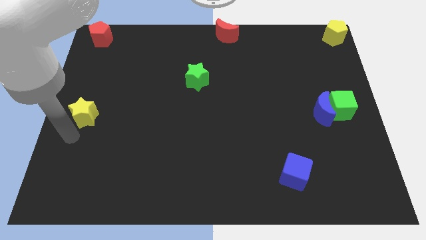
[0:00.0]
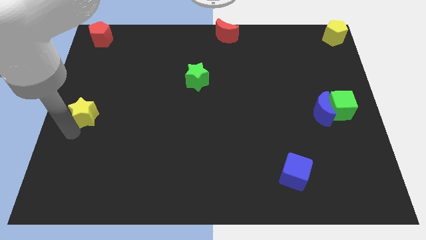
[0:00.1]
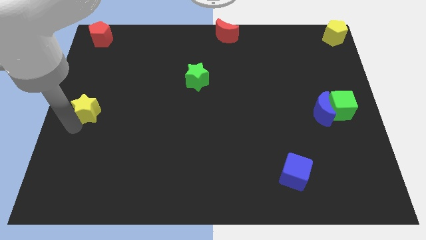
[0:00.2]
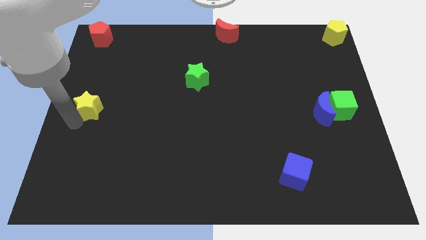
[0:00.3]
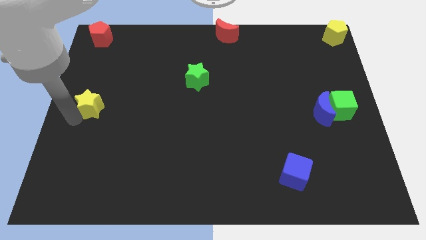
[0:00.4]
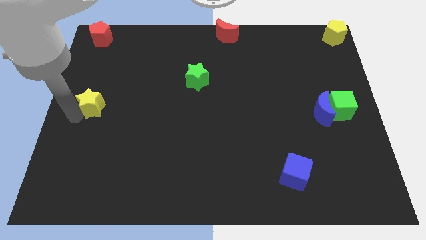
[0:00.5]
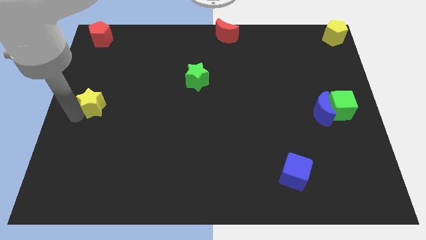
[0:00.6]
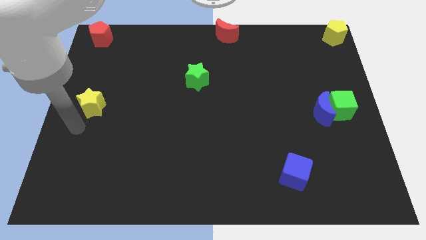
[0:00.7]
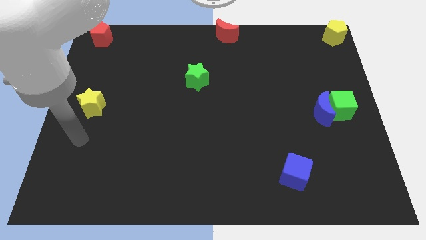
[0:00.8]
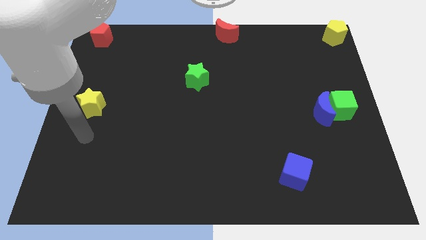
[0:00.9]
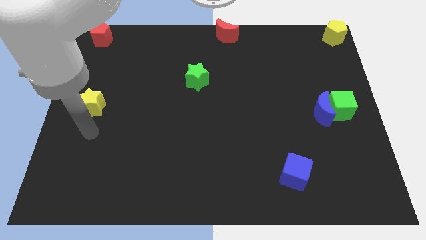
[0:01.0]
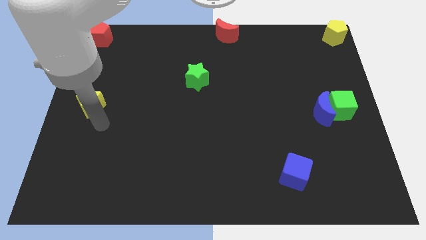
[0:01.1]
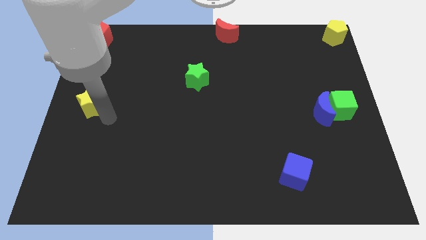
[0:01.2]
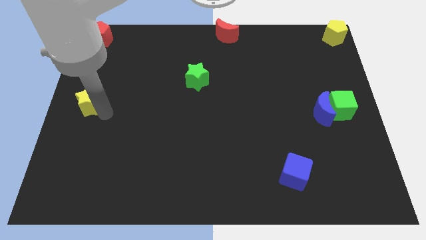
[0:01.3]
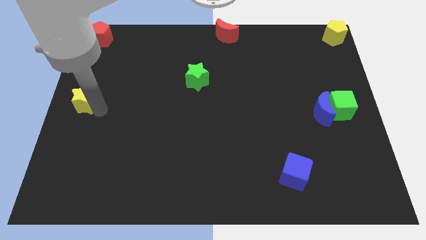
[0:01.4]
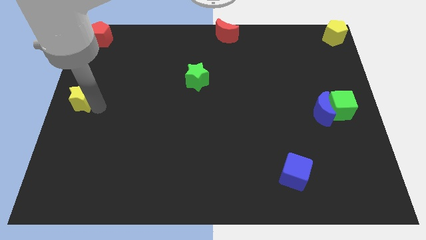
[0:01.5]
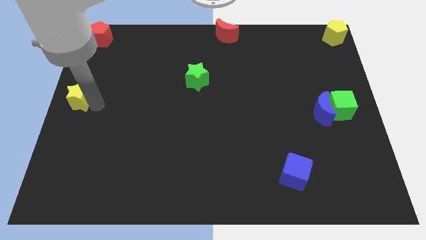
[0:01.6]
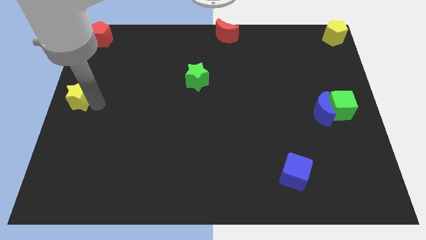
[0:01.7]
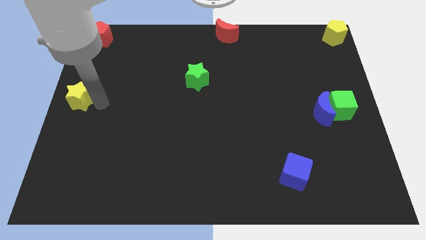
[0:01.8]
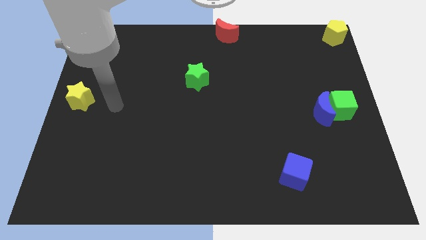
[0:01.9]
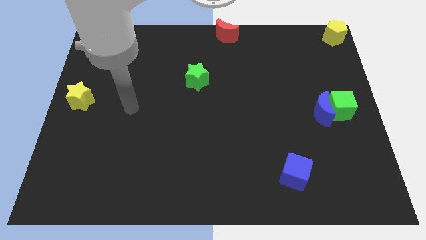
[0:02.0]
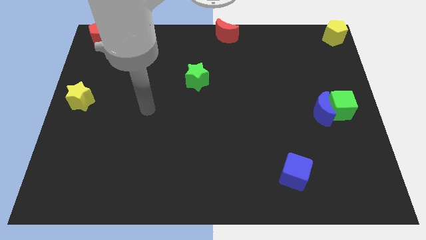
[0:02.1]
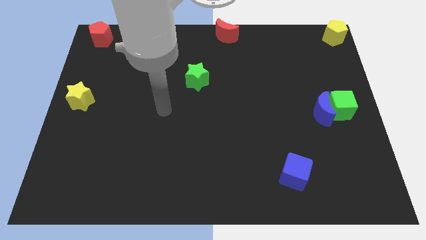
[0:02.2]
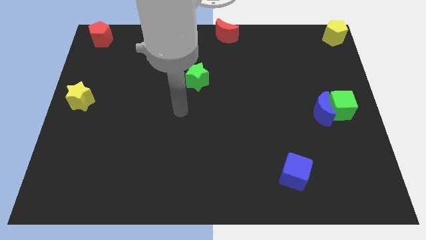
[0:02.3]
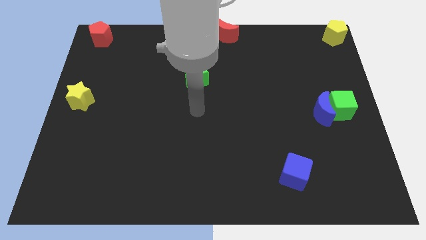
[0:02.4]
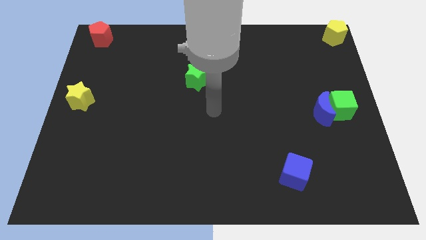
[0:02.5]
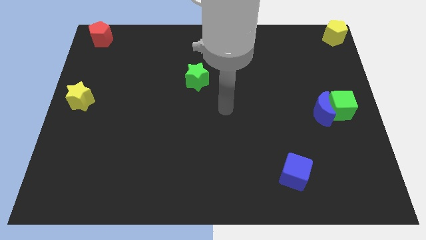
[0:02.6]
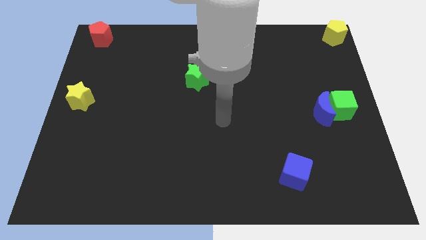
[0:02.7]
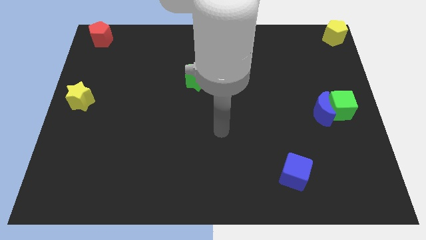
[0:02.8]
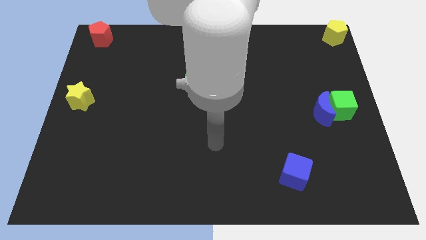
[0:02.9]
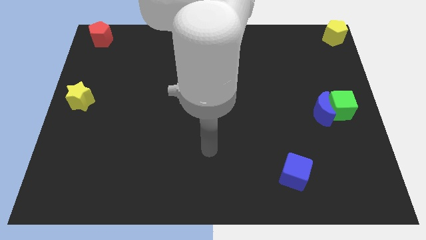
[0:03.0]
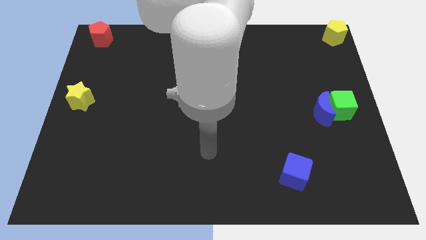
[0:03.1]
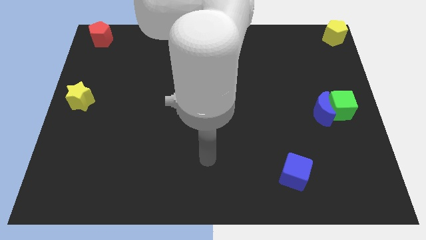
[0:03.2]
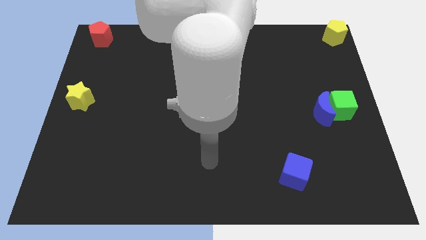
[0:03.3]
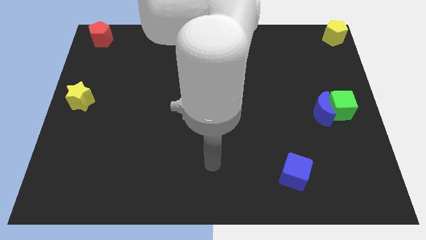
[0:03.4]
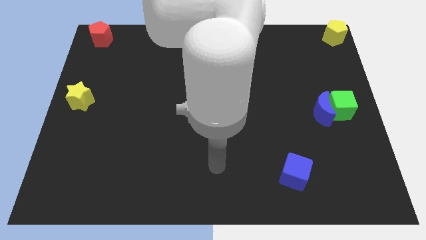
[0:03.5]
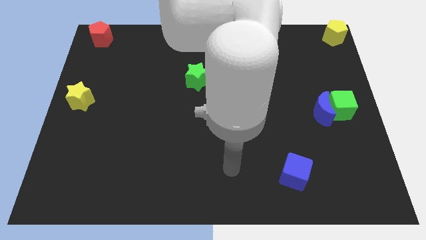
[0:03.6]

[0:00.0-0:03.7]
place the yellow star vertically to red pentagon

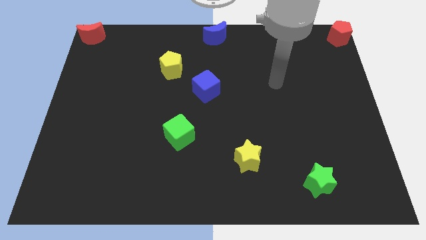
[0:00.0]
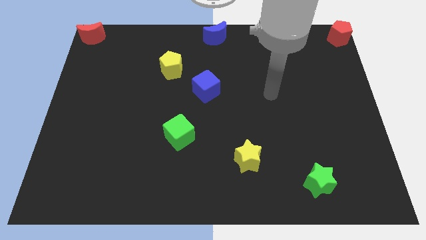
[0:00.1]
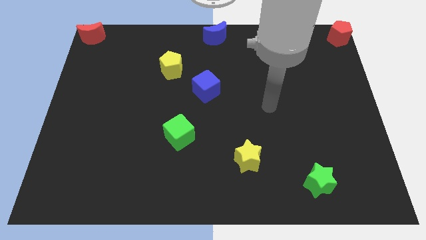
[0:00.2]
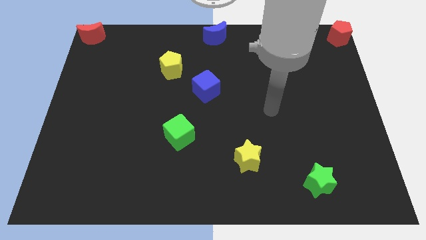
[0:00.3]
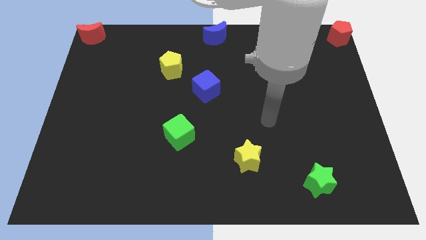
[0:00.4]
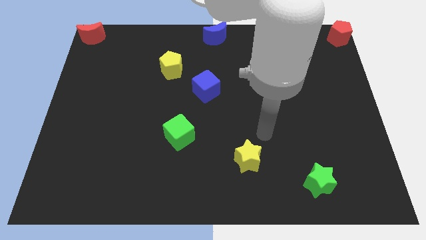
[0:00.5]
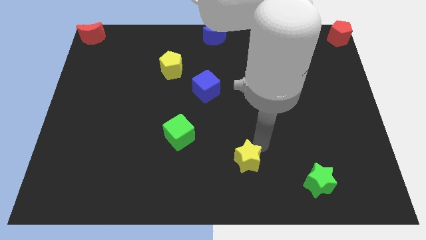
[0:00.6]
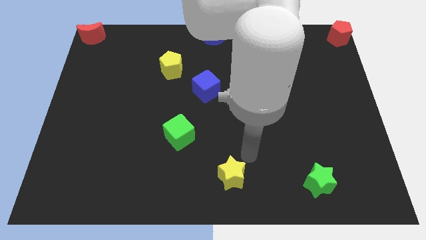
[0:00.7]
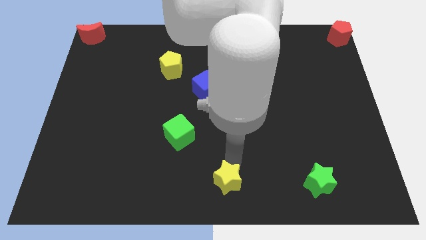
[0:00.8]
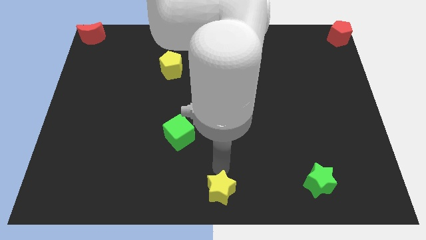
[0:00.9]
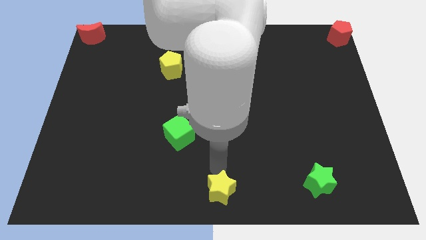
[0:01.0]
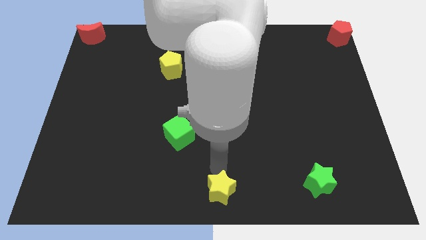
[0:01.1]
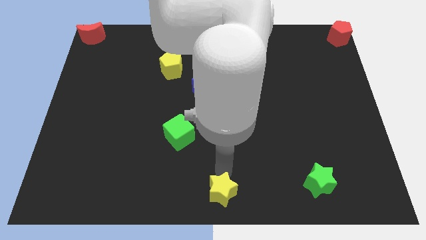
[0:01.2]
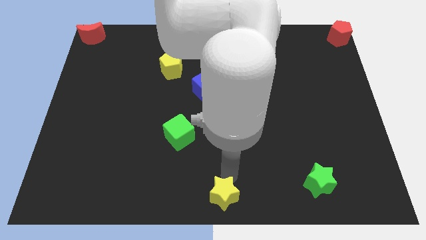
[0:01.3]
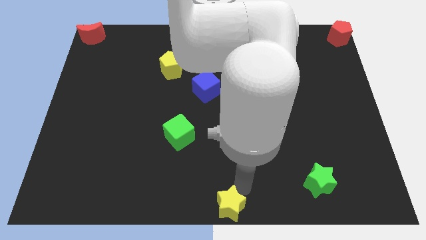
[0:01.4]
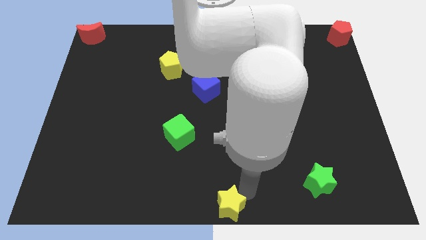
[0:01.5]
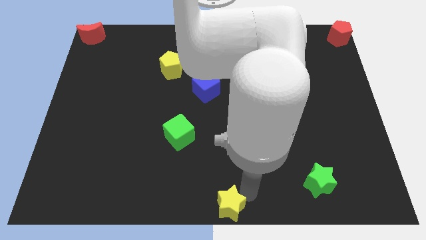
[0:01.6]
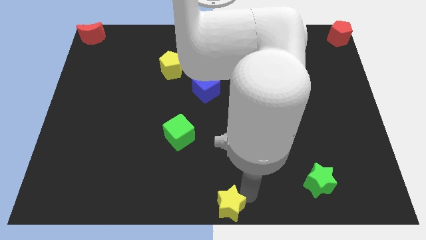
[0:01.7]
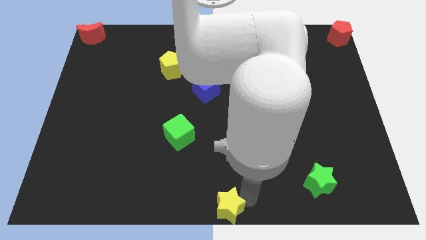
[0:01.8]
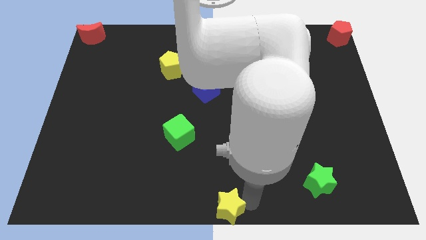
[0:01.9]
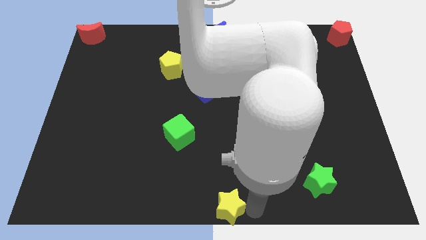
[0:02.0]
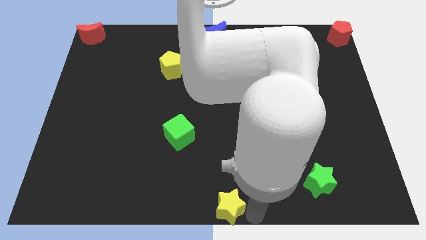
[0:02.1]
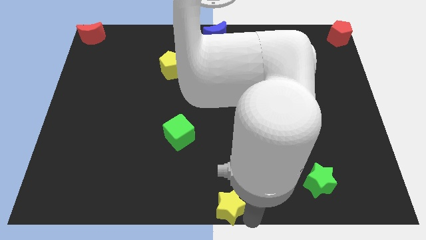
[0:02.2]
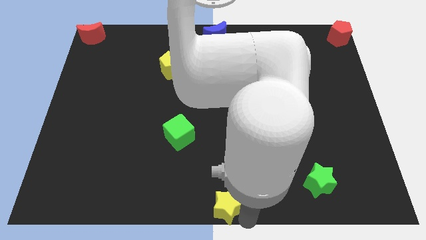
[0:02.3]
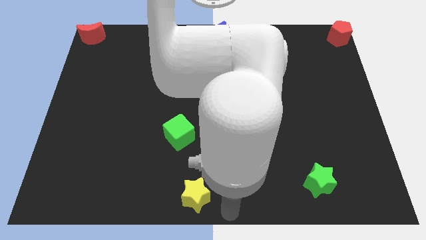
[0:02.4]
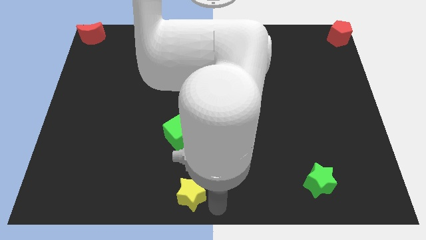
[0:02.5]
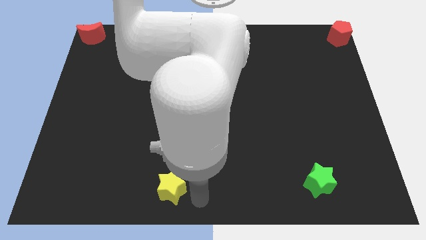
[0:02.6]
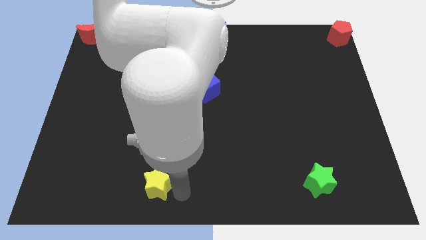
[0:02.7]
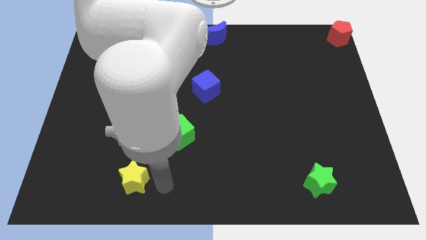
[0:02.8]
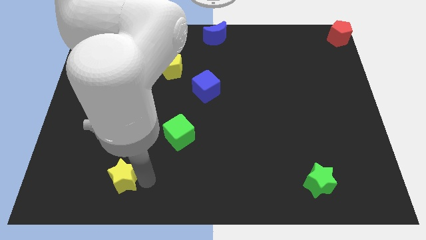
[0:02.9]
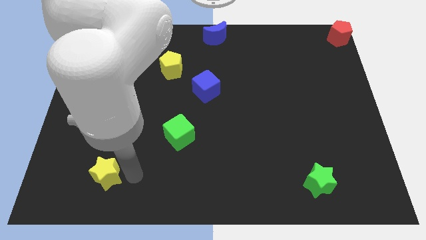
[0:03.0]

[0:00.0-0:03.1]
push the yellow star horizontally to the left side of the green star

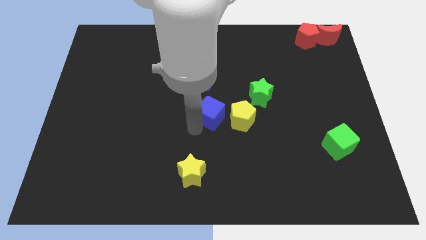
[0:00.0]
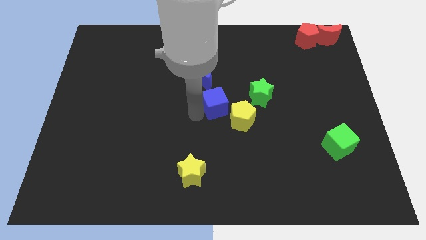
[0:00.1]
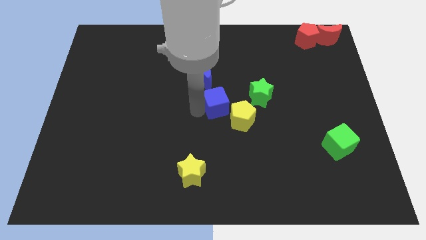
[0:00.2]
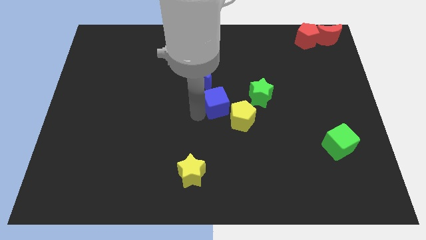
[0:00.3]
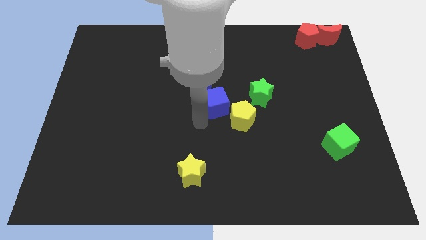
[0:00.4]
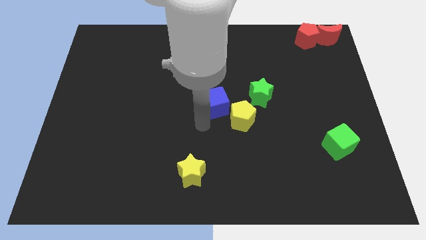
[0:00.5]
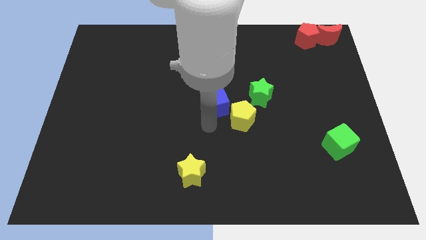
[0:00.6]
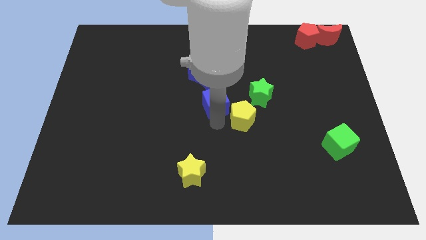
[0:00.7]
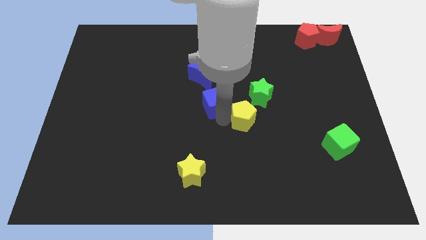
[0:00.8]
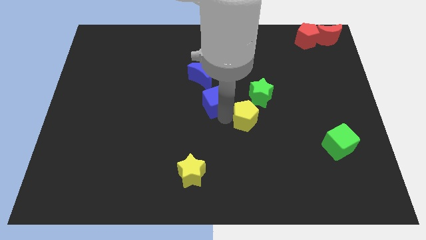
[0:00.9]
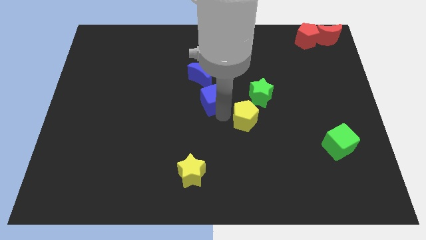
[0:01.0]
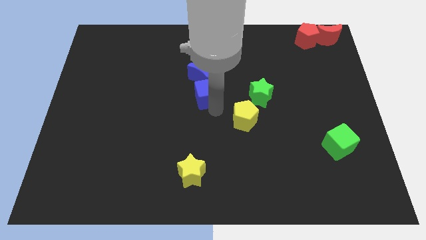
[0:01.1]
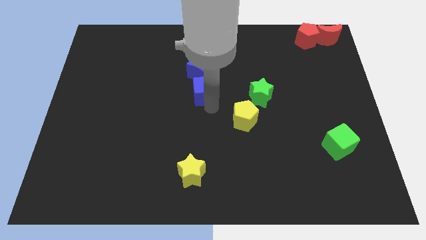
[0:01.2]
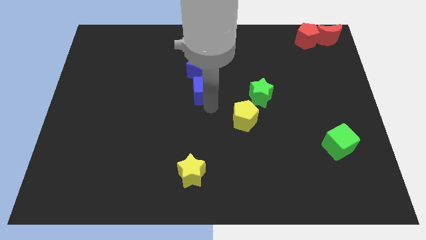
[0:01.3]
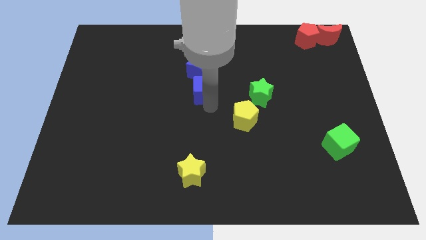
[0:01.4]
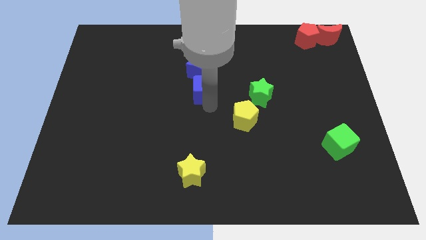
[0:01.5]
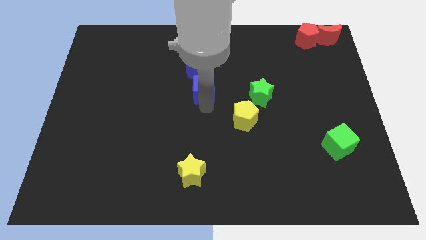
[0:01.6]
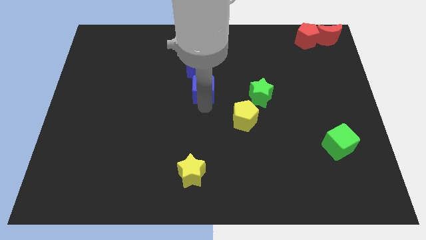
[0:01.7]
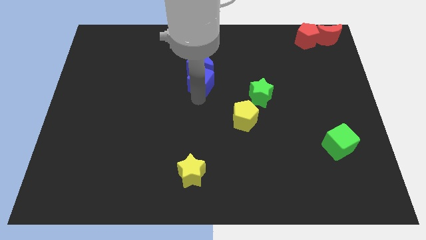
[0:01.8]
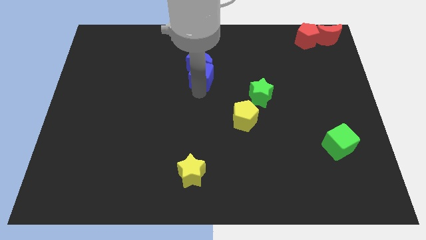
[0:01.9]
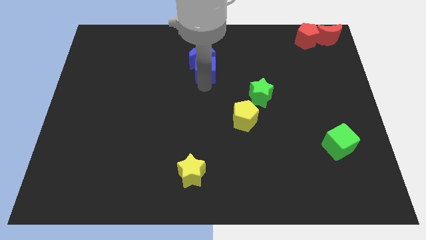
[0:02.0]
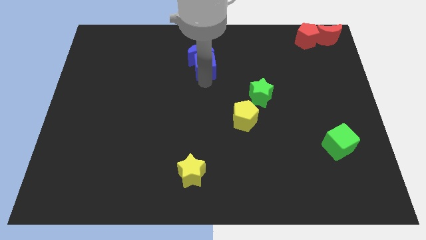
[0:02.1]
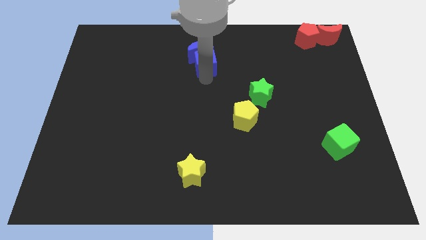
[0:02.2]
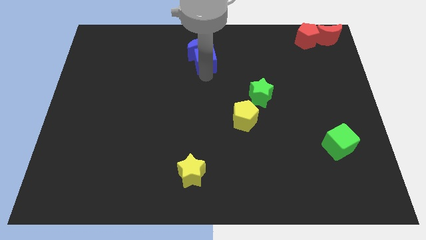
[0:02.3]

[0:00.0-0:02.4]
place blue cube to the bottom of the blue moon
